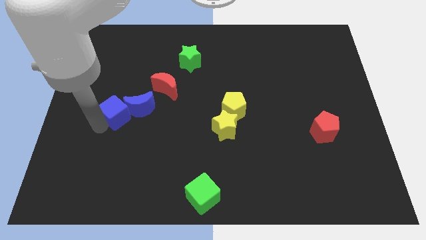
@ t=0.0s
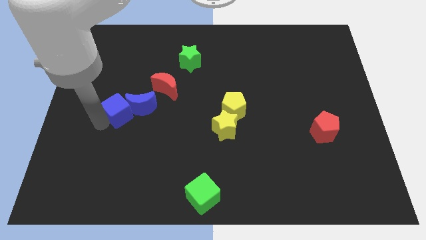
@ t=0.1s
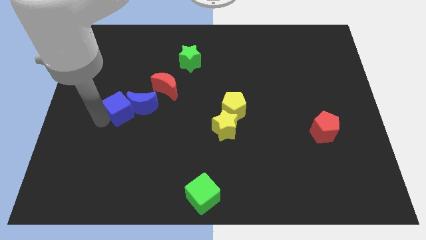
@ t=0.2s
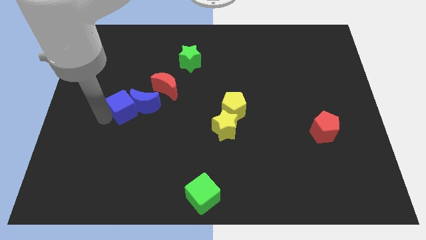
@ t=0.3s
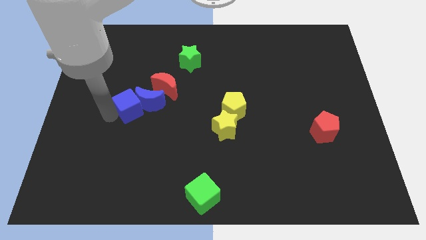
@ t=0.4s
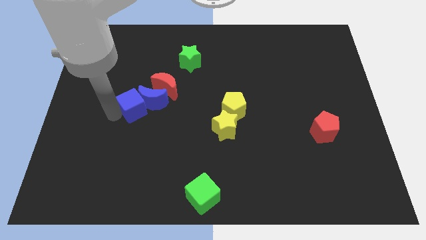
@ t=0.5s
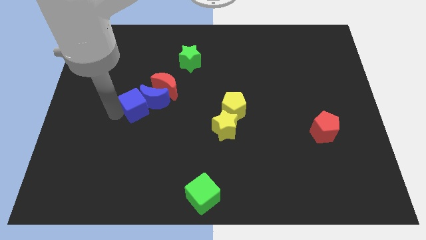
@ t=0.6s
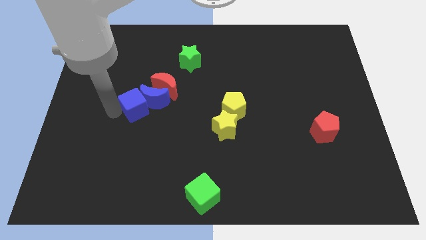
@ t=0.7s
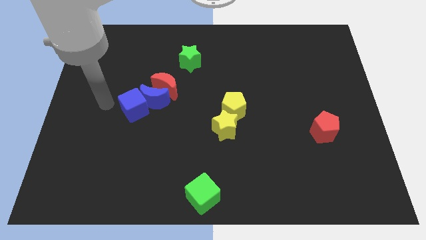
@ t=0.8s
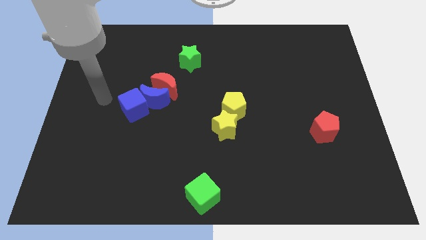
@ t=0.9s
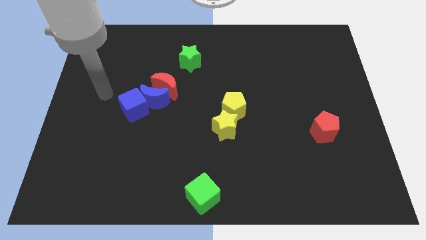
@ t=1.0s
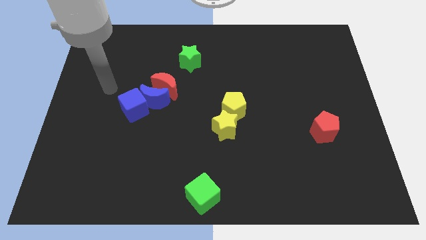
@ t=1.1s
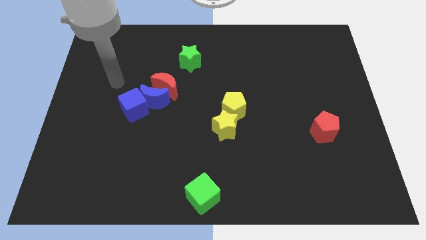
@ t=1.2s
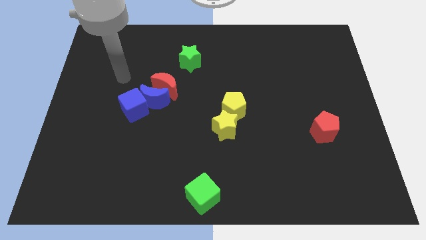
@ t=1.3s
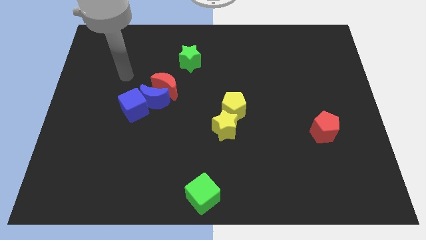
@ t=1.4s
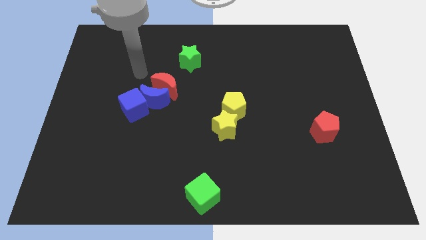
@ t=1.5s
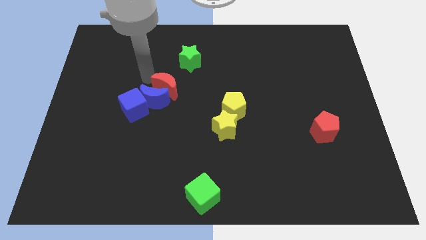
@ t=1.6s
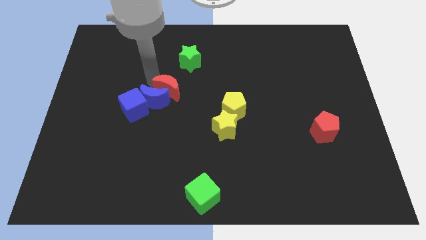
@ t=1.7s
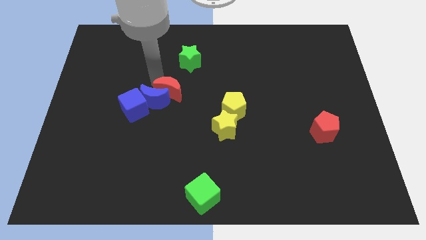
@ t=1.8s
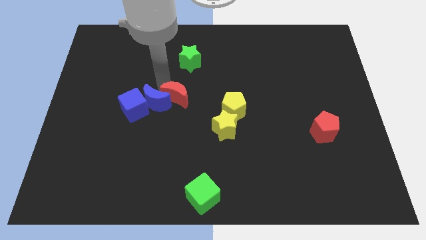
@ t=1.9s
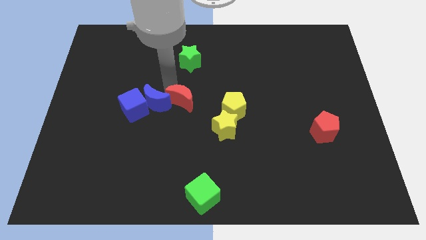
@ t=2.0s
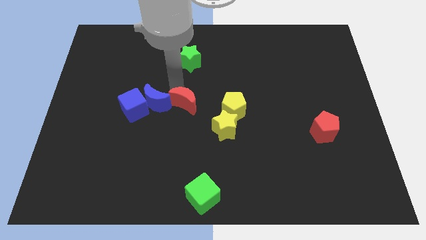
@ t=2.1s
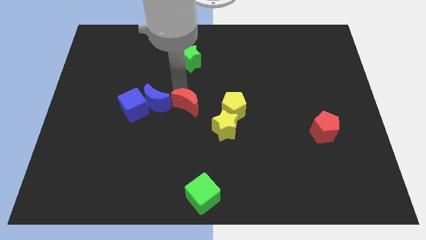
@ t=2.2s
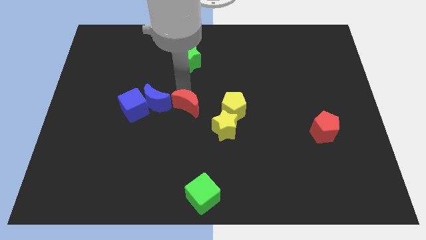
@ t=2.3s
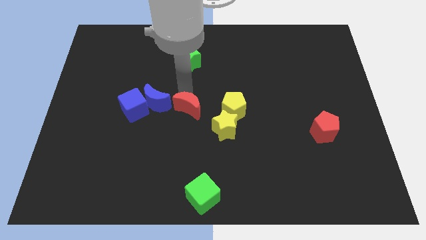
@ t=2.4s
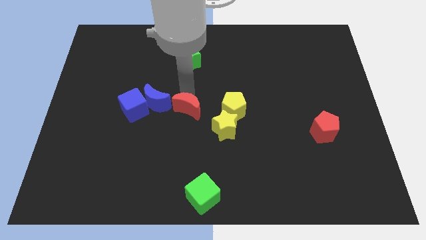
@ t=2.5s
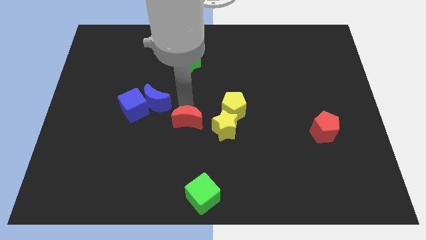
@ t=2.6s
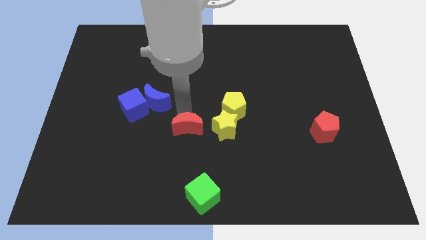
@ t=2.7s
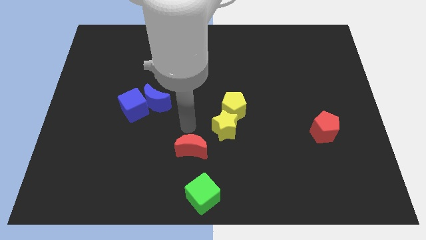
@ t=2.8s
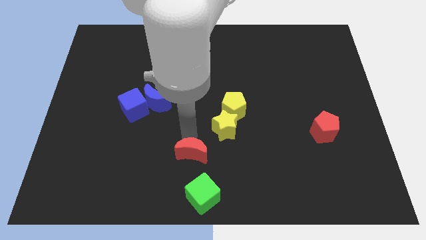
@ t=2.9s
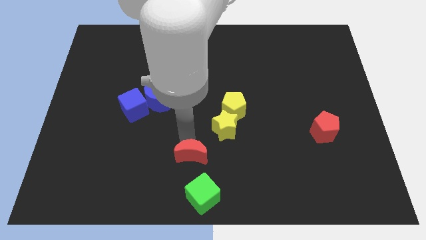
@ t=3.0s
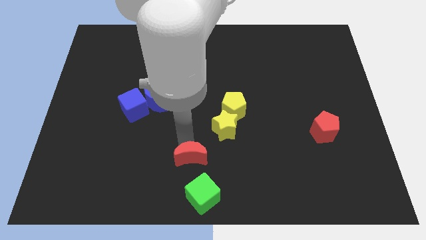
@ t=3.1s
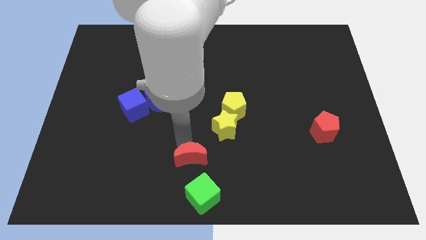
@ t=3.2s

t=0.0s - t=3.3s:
push the red moon to the top side of the green cube

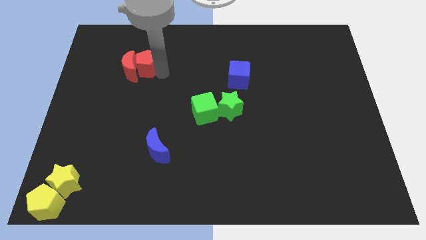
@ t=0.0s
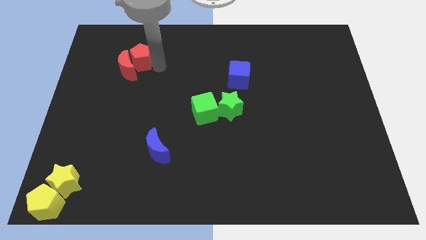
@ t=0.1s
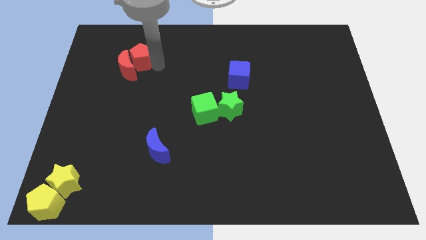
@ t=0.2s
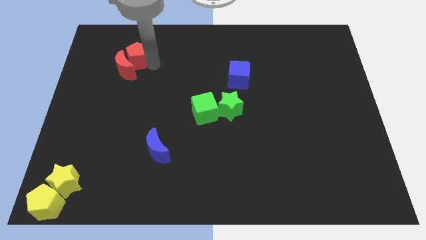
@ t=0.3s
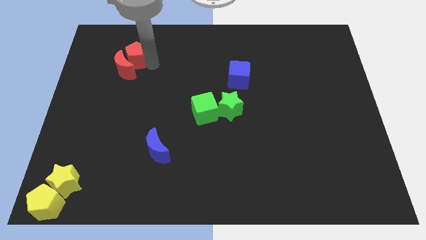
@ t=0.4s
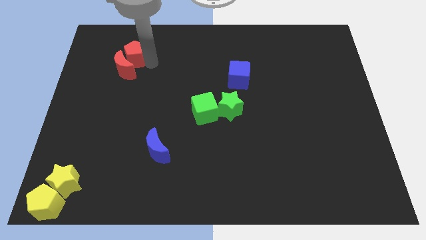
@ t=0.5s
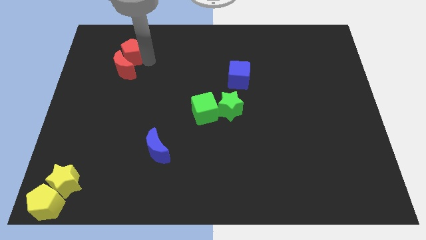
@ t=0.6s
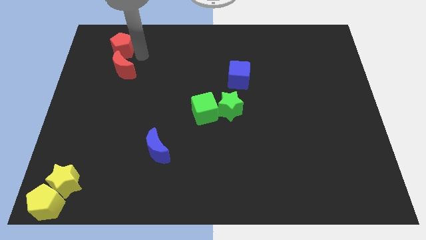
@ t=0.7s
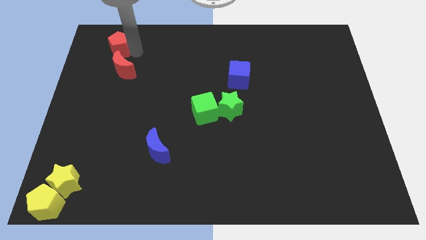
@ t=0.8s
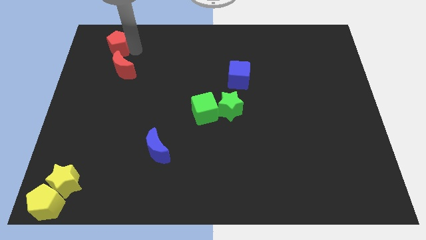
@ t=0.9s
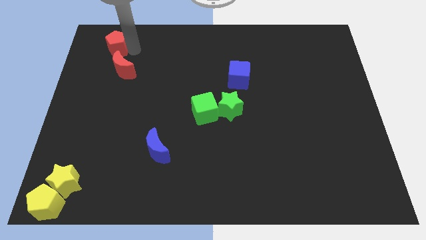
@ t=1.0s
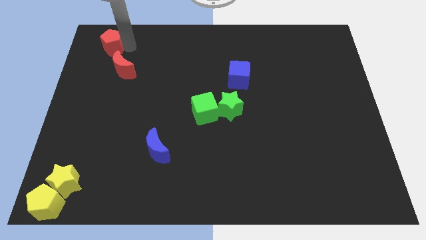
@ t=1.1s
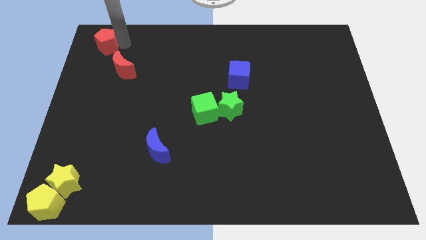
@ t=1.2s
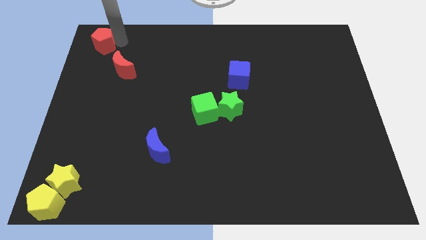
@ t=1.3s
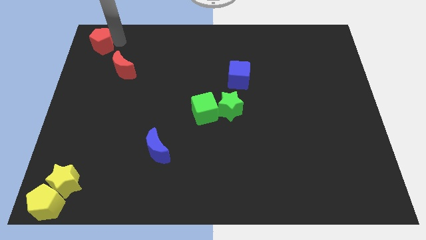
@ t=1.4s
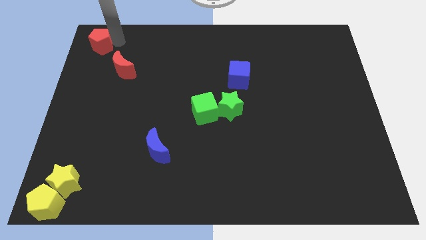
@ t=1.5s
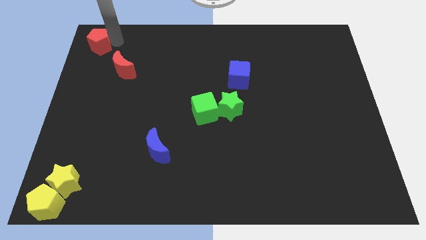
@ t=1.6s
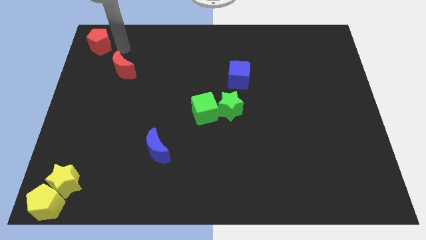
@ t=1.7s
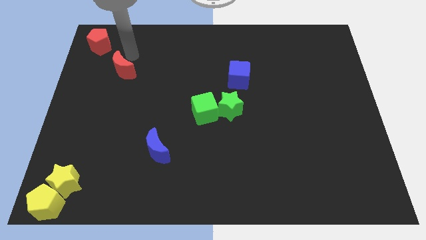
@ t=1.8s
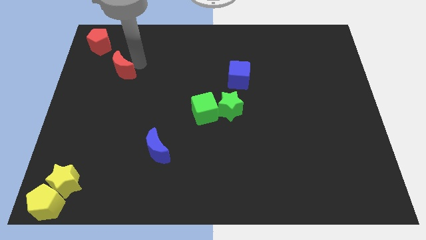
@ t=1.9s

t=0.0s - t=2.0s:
push the red pentagon away from the red crescent

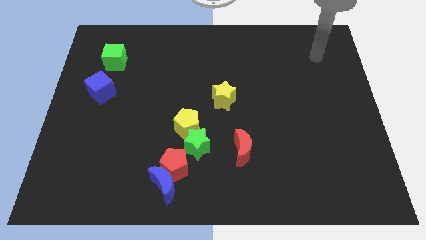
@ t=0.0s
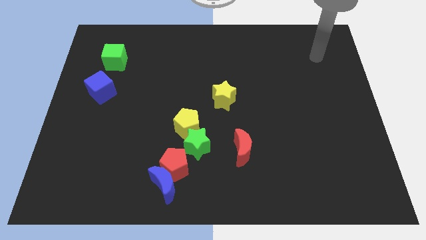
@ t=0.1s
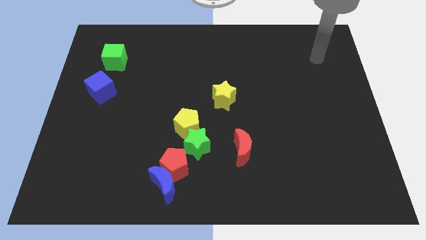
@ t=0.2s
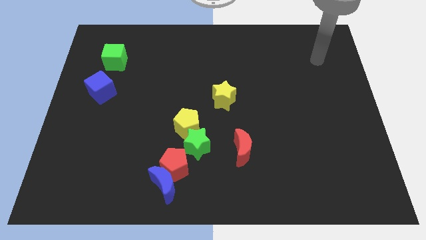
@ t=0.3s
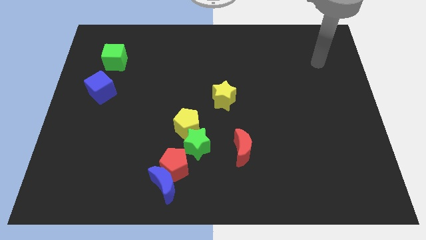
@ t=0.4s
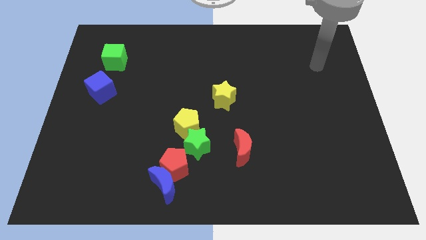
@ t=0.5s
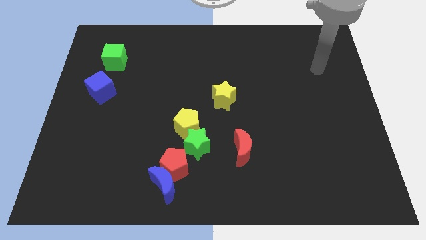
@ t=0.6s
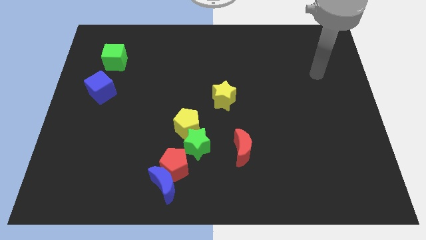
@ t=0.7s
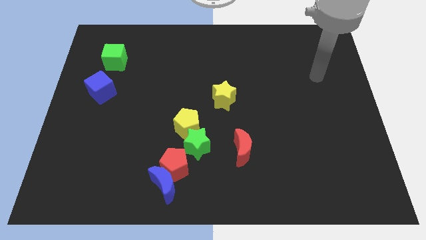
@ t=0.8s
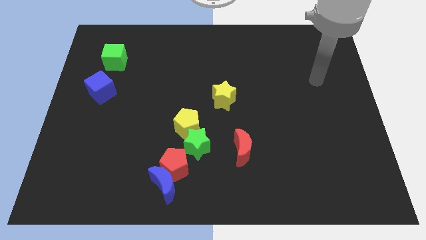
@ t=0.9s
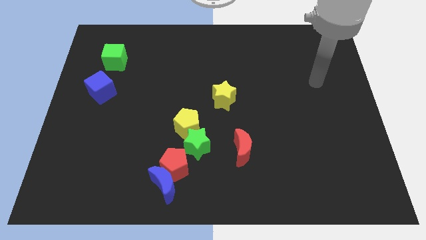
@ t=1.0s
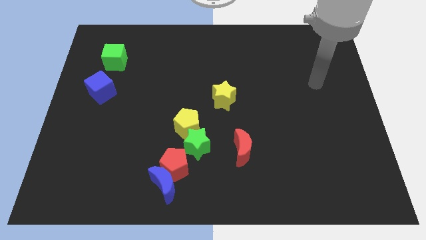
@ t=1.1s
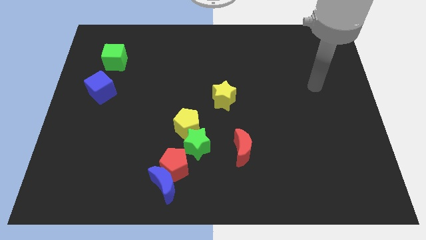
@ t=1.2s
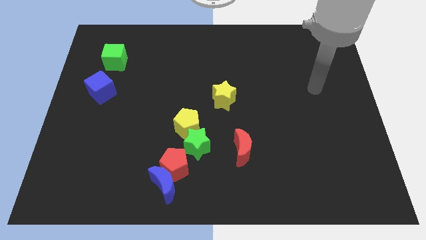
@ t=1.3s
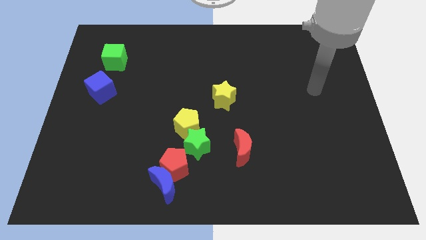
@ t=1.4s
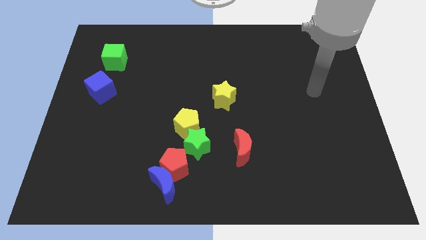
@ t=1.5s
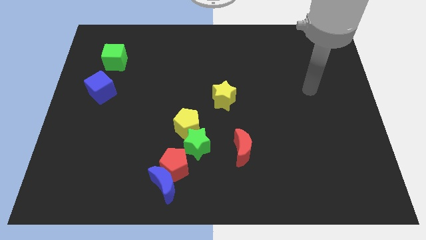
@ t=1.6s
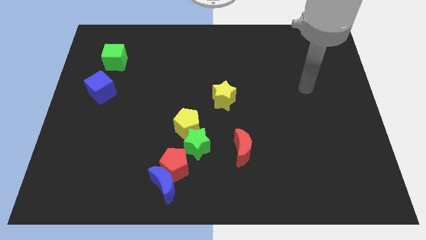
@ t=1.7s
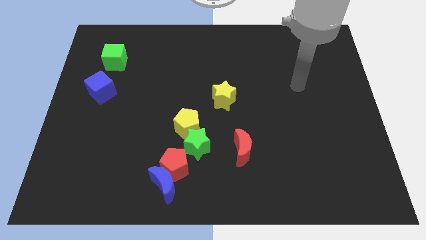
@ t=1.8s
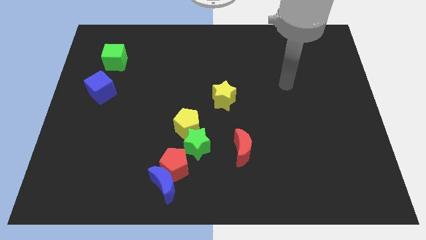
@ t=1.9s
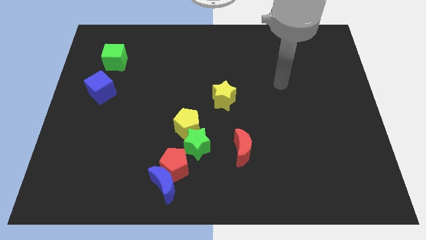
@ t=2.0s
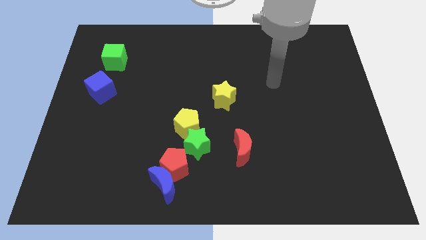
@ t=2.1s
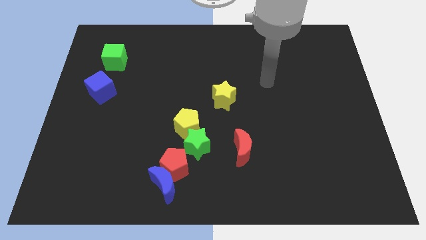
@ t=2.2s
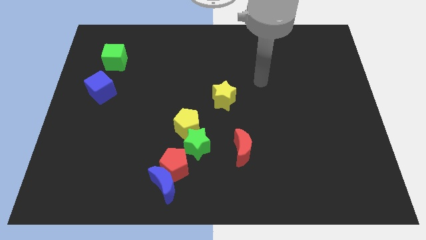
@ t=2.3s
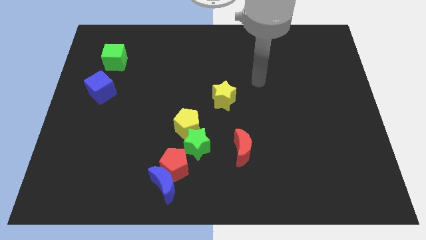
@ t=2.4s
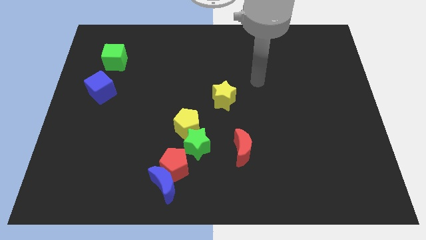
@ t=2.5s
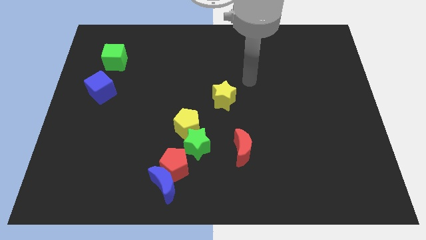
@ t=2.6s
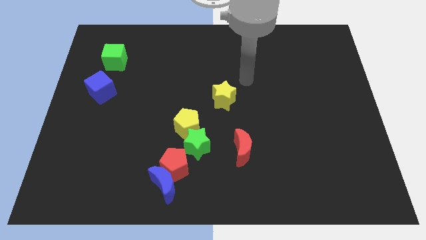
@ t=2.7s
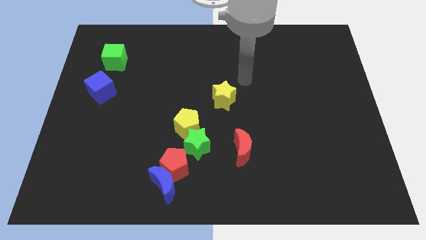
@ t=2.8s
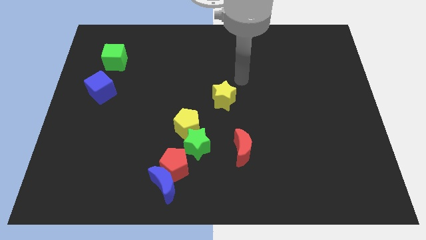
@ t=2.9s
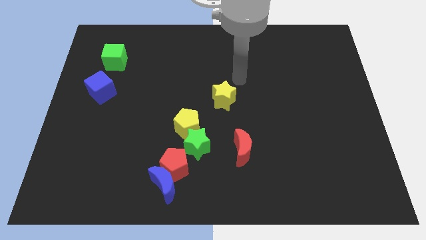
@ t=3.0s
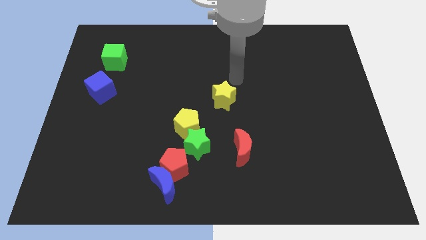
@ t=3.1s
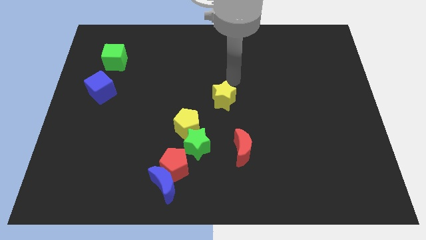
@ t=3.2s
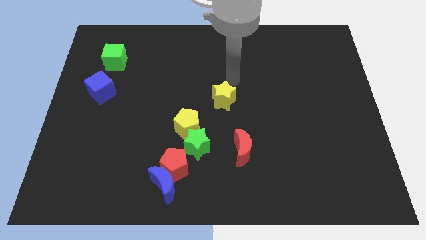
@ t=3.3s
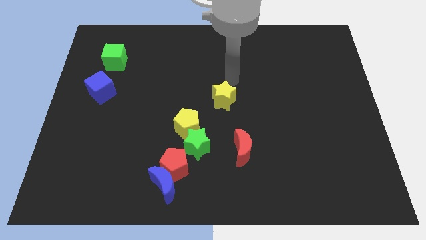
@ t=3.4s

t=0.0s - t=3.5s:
place your arm to the top of yellow star
